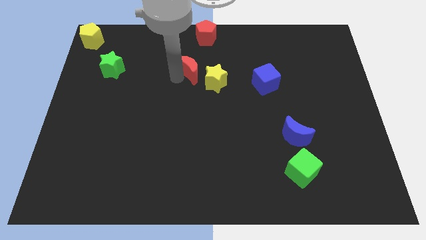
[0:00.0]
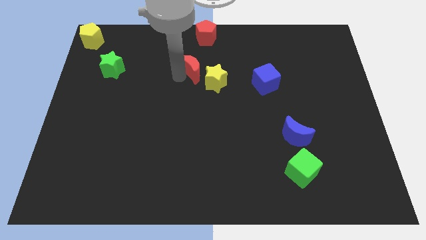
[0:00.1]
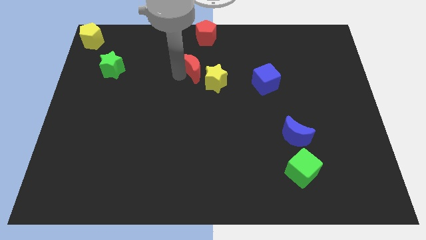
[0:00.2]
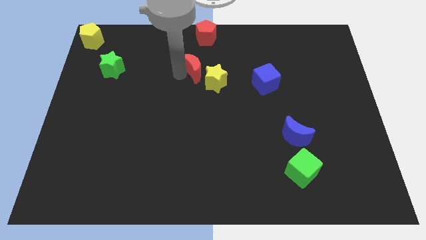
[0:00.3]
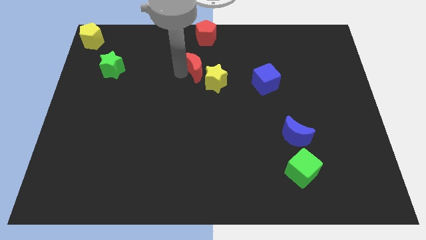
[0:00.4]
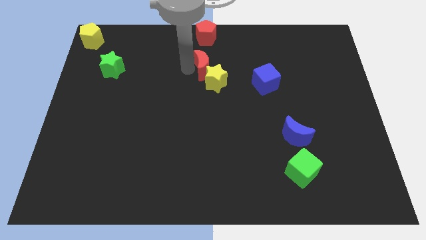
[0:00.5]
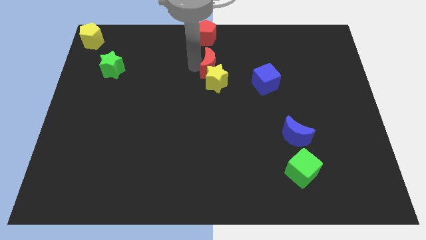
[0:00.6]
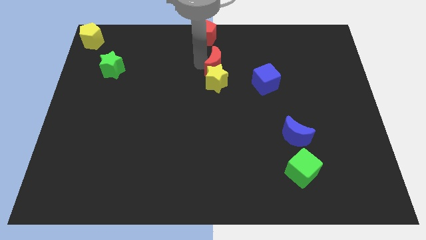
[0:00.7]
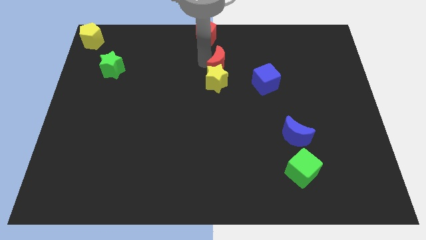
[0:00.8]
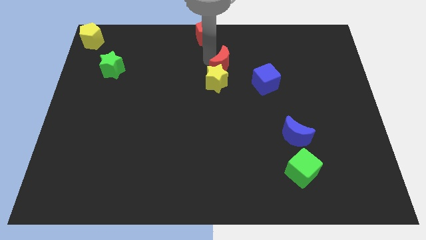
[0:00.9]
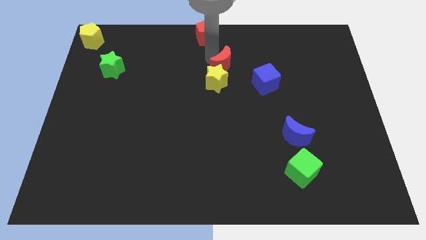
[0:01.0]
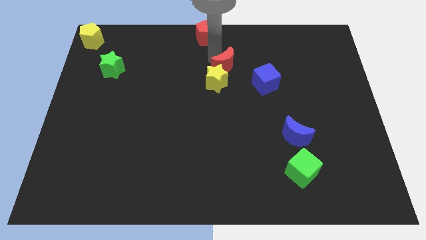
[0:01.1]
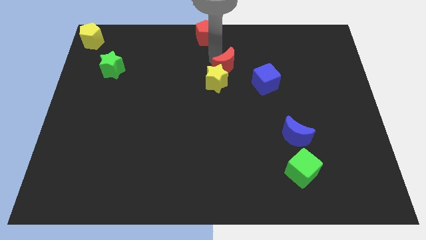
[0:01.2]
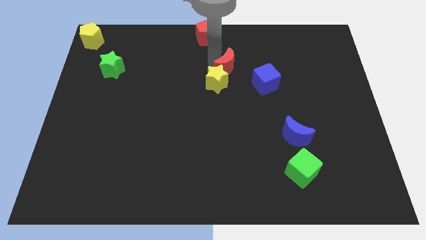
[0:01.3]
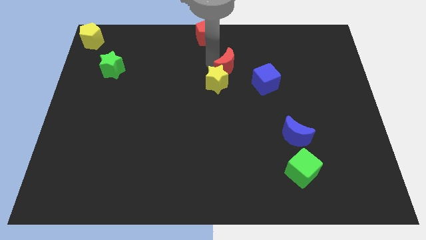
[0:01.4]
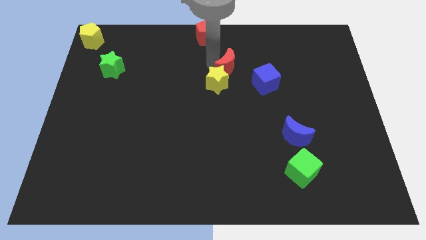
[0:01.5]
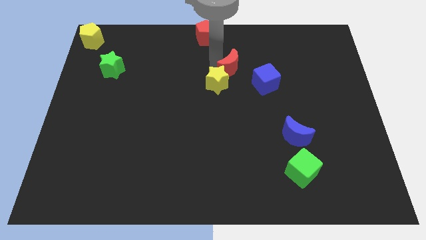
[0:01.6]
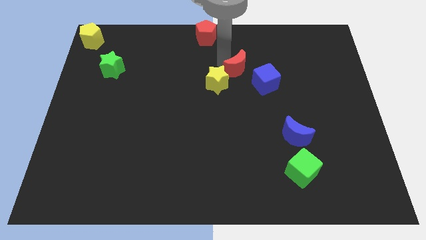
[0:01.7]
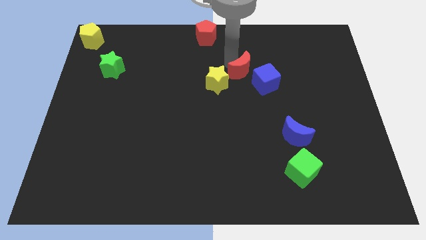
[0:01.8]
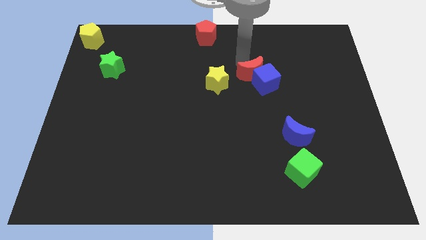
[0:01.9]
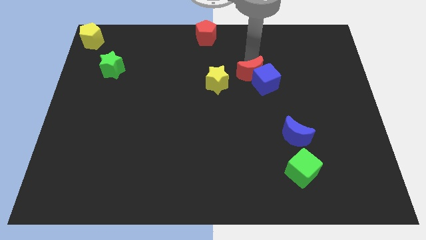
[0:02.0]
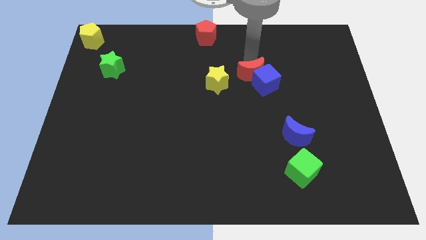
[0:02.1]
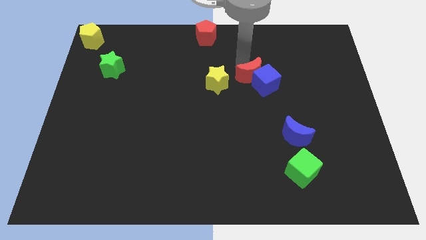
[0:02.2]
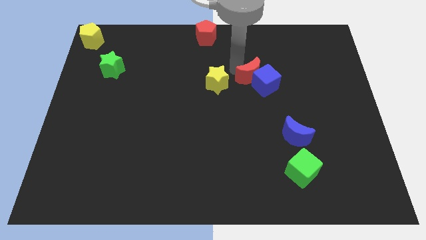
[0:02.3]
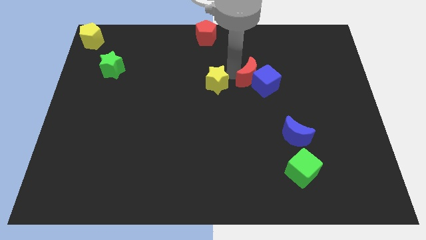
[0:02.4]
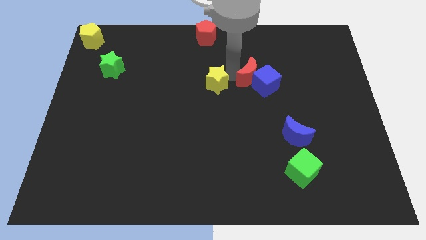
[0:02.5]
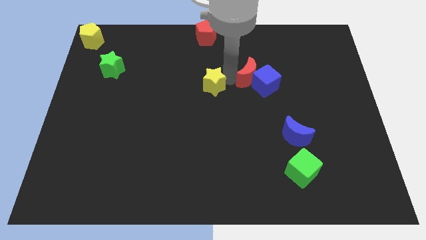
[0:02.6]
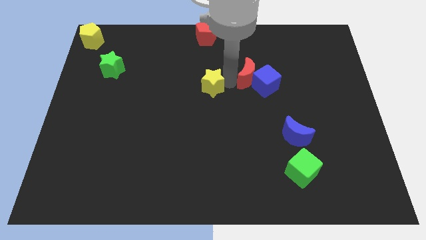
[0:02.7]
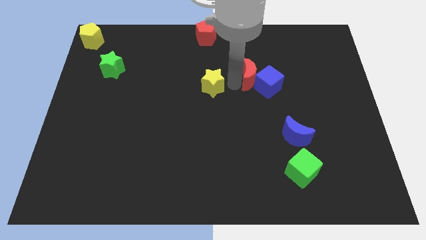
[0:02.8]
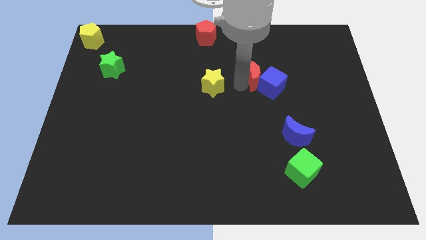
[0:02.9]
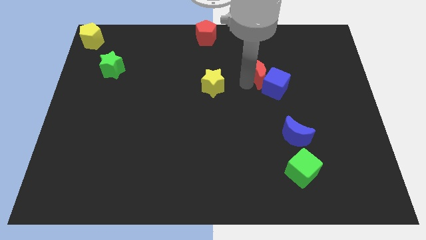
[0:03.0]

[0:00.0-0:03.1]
push the red moon into the blue cub

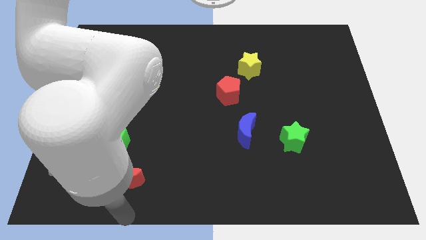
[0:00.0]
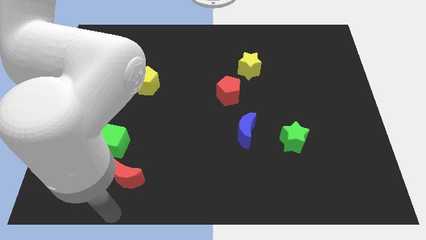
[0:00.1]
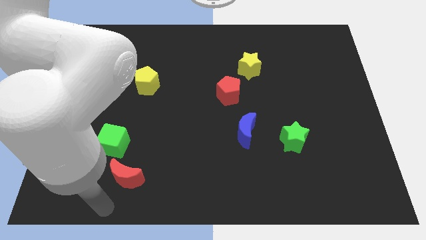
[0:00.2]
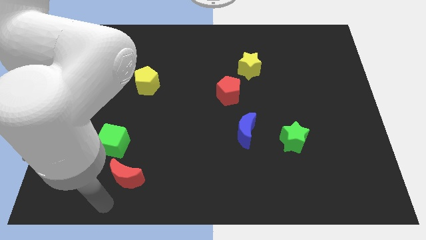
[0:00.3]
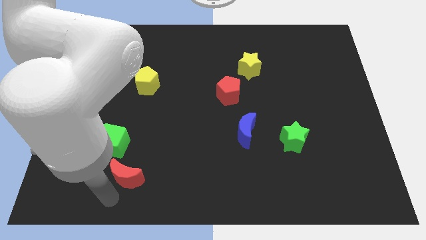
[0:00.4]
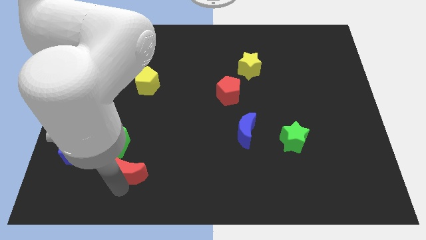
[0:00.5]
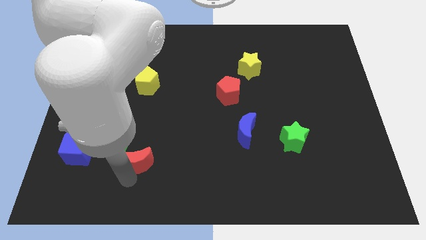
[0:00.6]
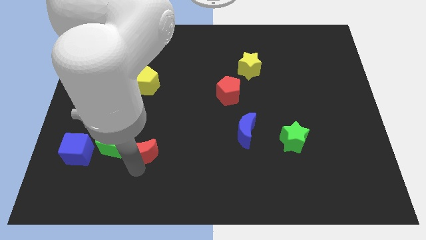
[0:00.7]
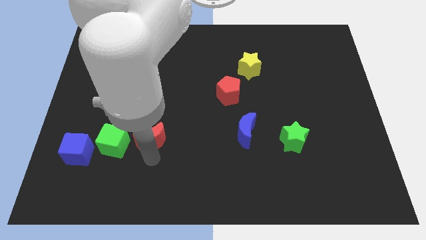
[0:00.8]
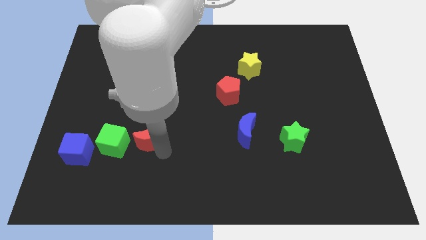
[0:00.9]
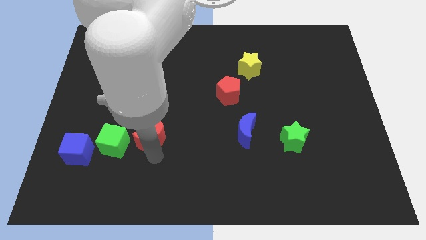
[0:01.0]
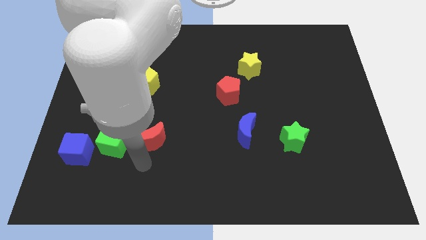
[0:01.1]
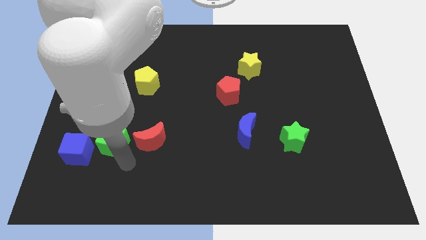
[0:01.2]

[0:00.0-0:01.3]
put the red moon parallel right to the green cube

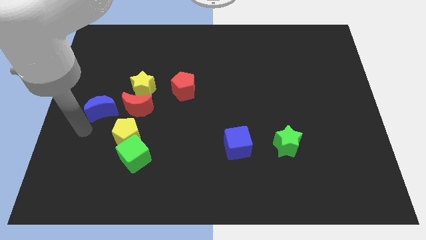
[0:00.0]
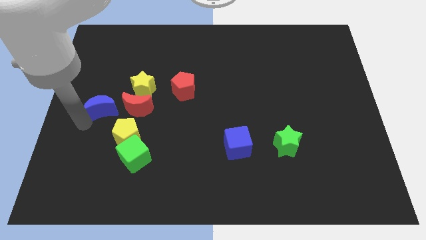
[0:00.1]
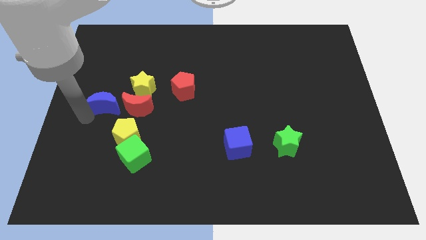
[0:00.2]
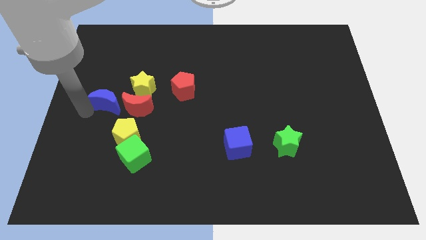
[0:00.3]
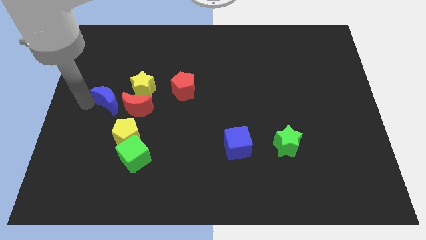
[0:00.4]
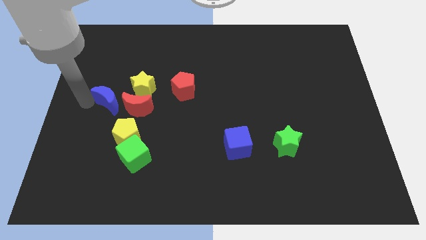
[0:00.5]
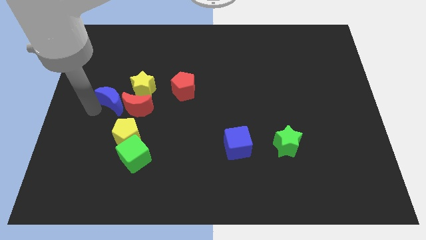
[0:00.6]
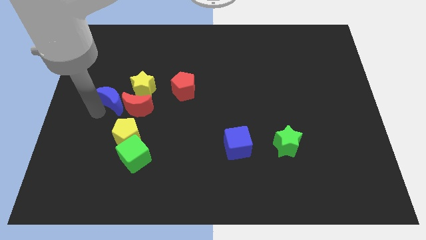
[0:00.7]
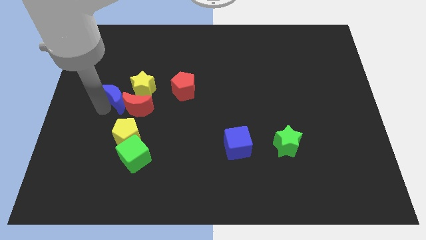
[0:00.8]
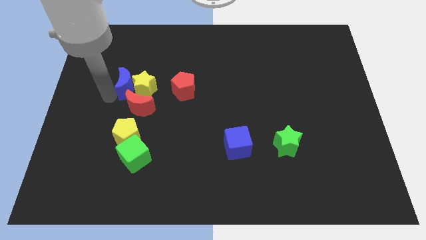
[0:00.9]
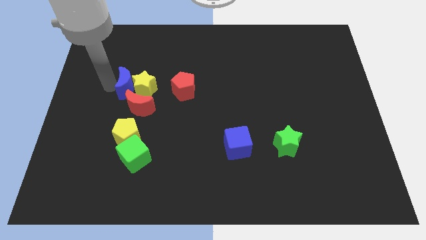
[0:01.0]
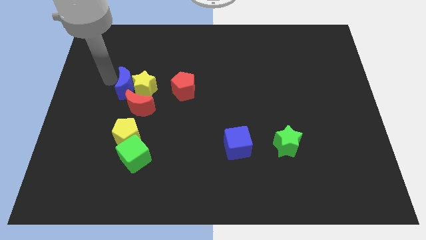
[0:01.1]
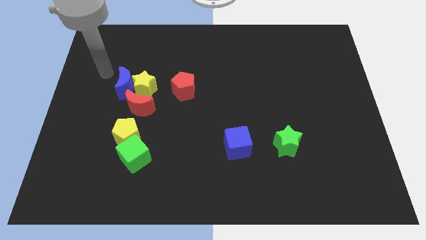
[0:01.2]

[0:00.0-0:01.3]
push the blue moon to the left of yellow star

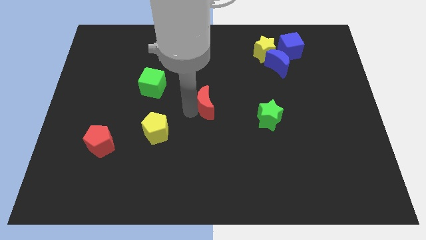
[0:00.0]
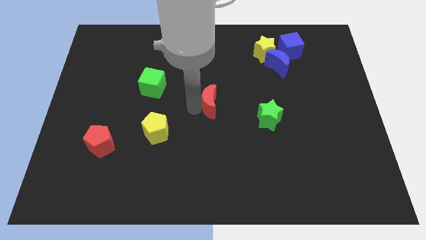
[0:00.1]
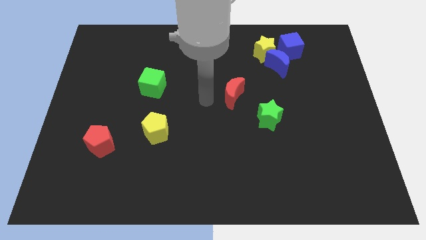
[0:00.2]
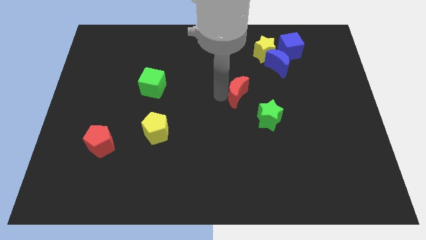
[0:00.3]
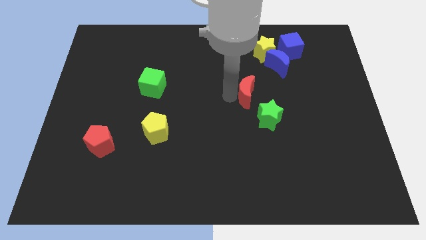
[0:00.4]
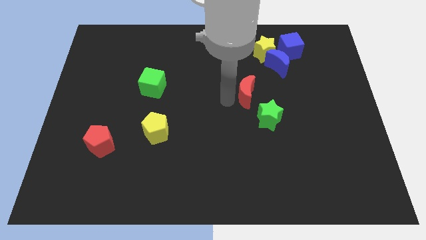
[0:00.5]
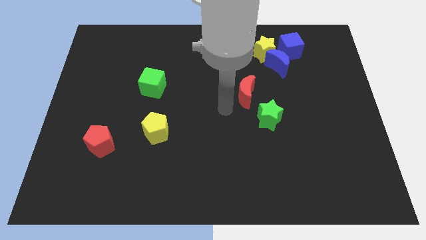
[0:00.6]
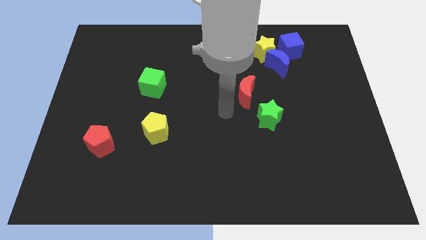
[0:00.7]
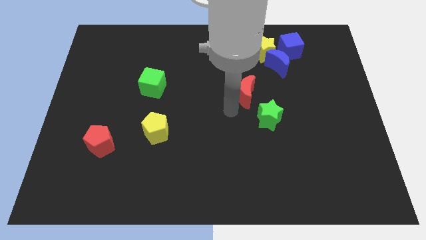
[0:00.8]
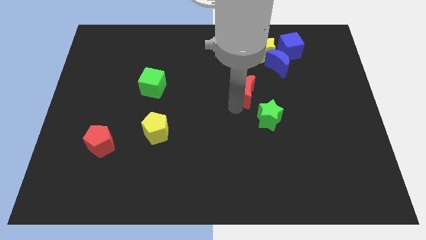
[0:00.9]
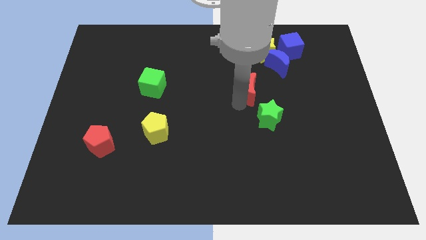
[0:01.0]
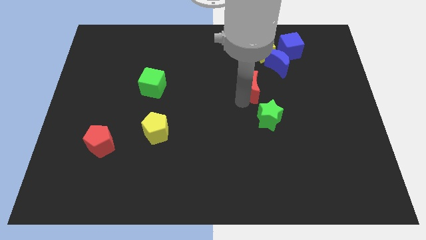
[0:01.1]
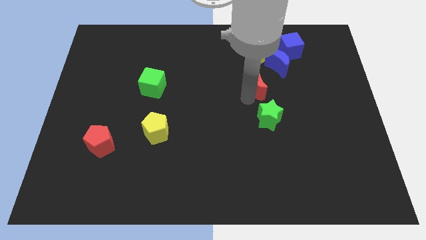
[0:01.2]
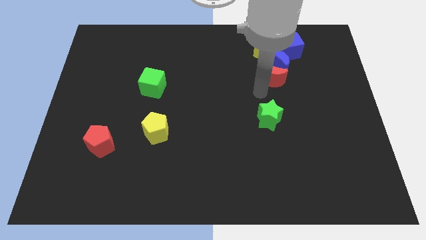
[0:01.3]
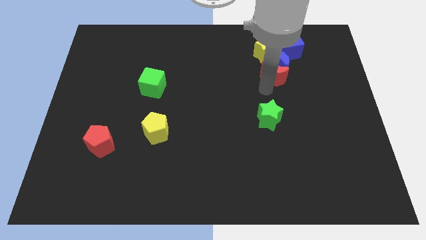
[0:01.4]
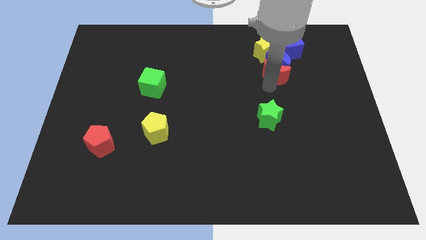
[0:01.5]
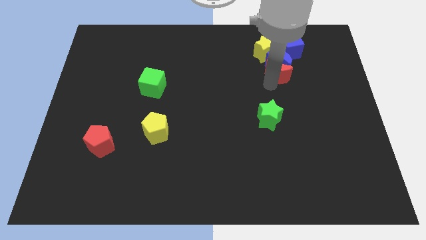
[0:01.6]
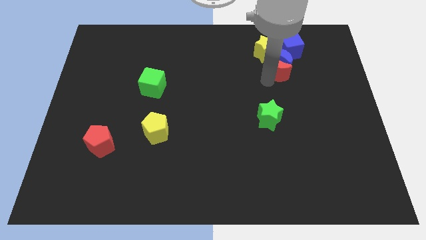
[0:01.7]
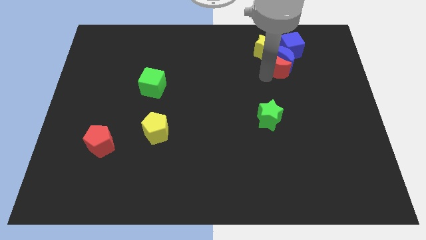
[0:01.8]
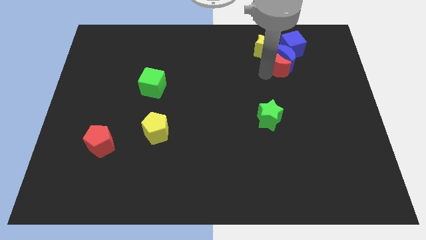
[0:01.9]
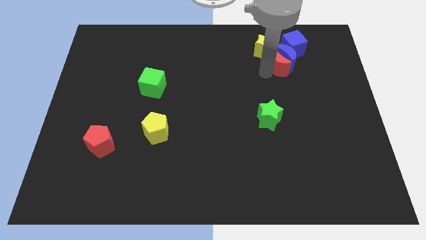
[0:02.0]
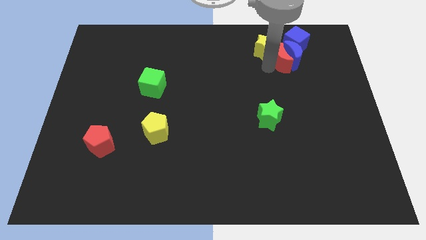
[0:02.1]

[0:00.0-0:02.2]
push the red moon into the blue moon

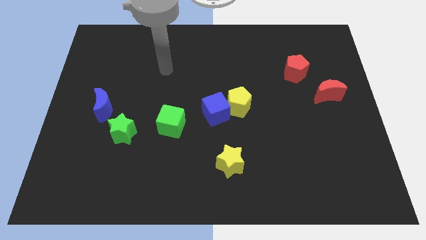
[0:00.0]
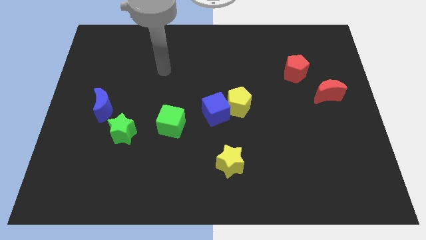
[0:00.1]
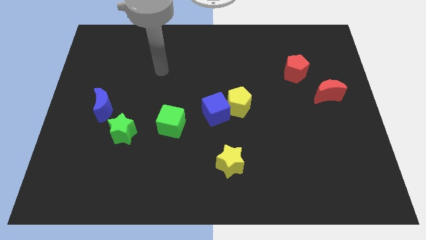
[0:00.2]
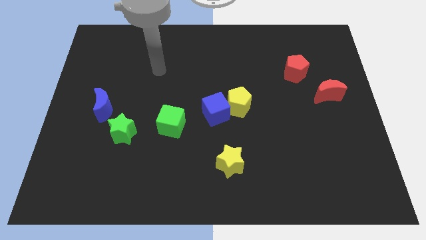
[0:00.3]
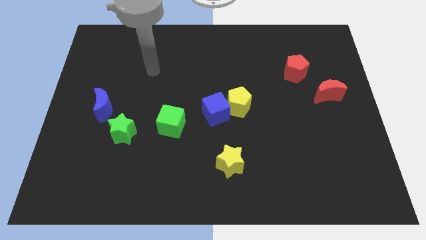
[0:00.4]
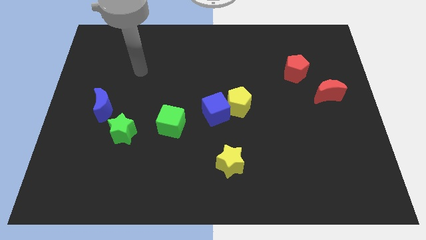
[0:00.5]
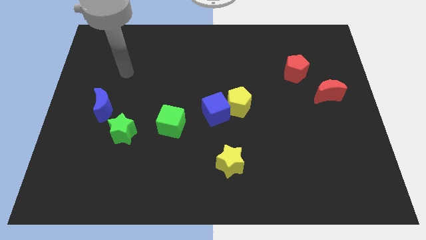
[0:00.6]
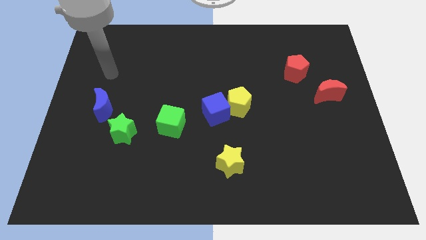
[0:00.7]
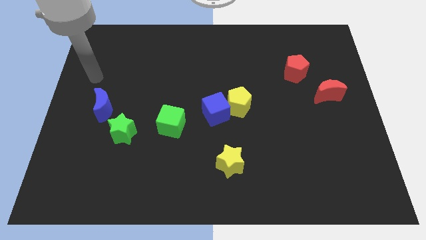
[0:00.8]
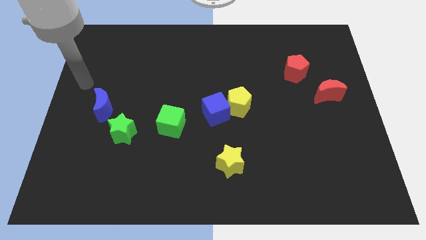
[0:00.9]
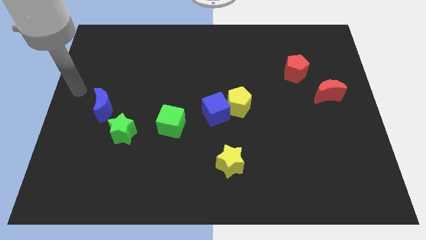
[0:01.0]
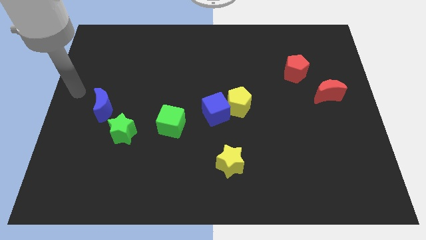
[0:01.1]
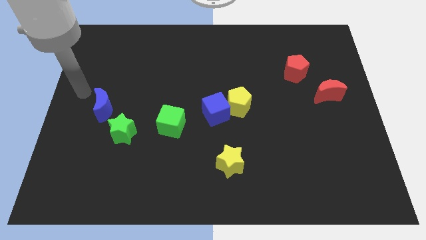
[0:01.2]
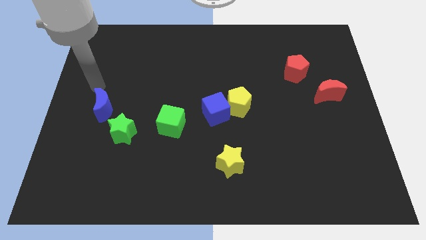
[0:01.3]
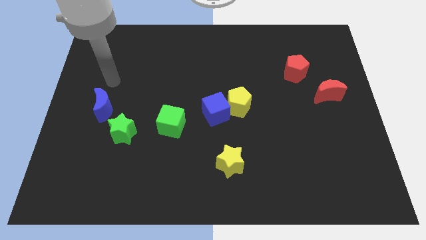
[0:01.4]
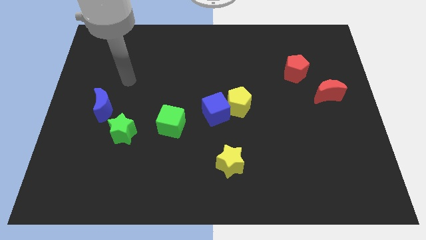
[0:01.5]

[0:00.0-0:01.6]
put the arm above the blue moon
